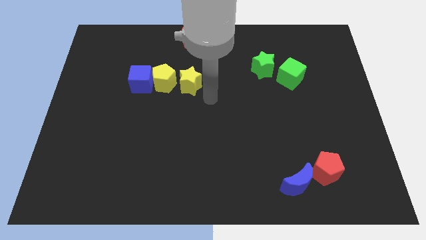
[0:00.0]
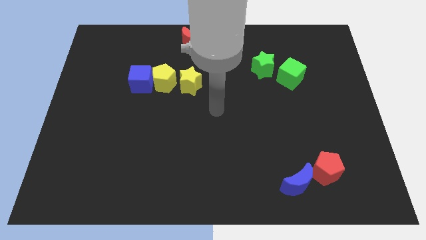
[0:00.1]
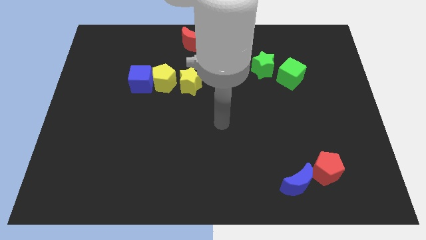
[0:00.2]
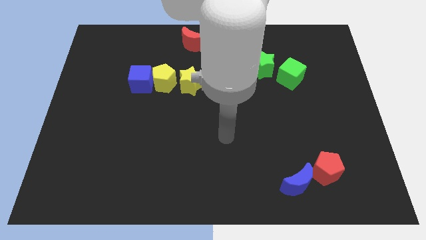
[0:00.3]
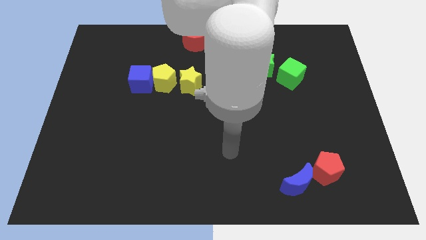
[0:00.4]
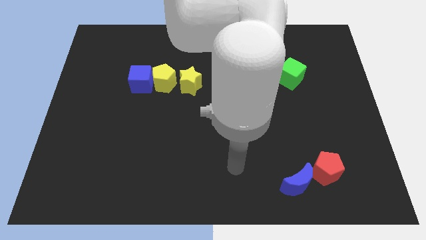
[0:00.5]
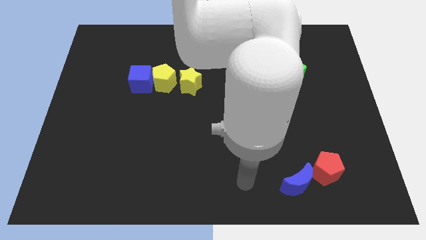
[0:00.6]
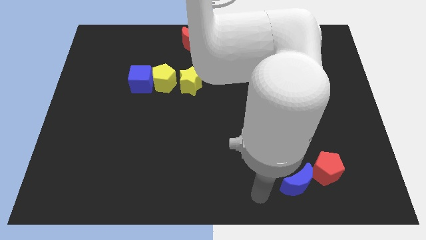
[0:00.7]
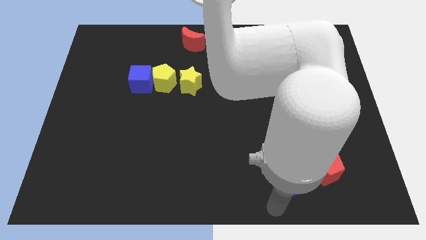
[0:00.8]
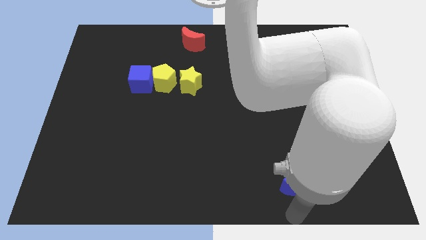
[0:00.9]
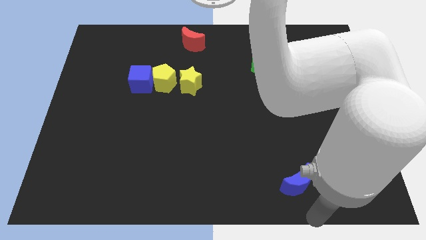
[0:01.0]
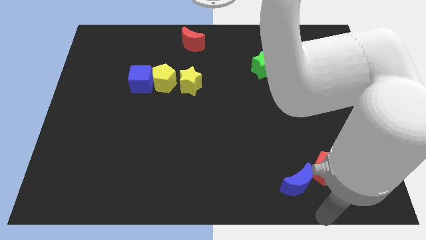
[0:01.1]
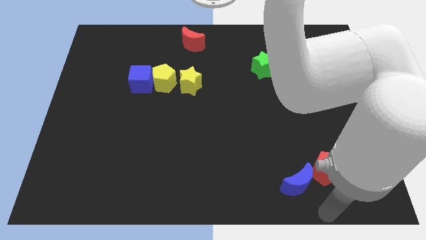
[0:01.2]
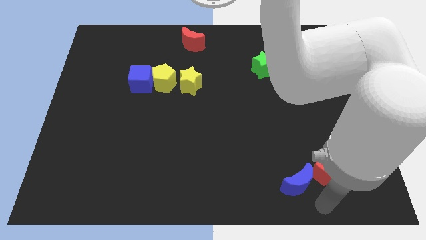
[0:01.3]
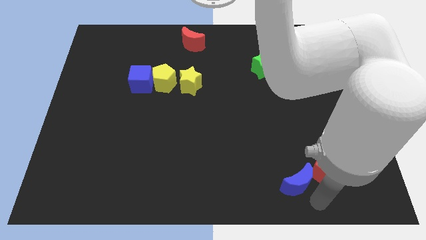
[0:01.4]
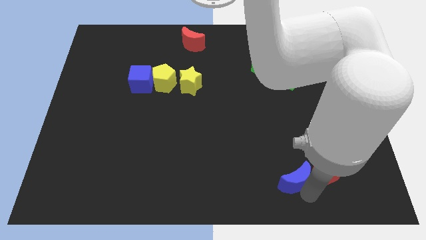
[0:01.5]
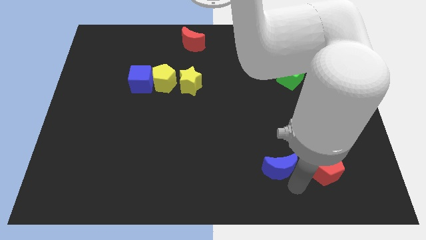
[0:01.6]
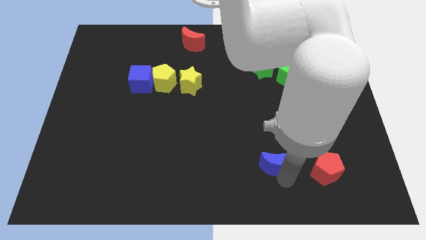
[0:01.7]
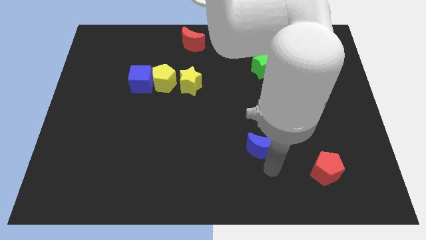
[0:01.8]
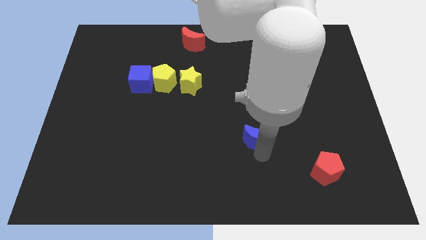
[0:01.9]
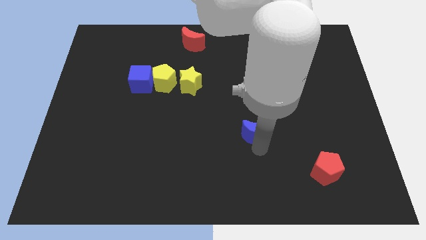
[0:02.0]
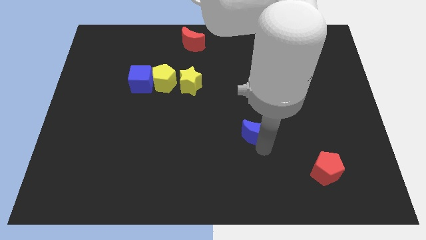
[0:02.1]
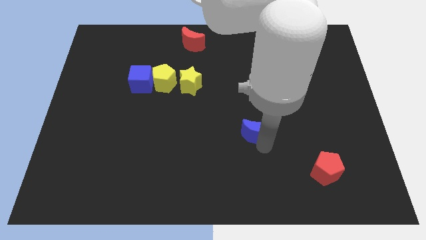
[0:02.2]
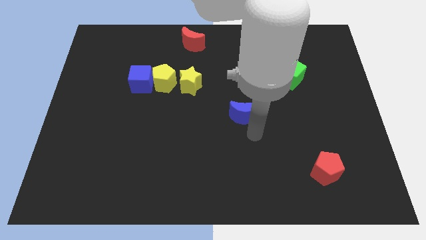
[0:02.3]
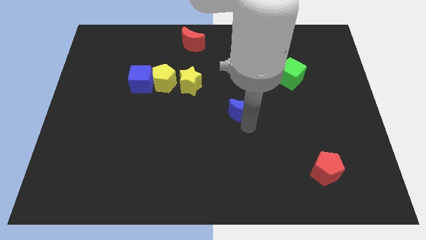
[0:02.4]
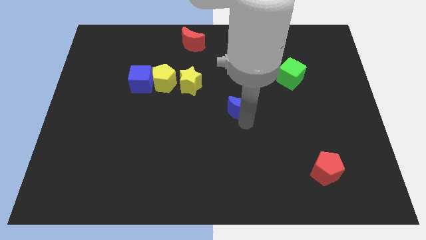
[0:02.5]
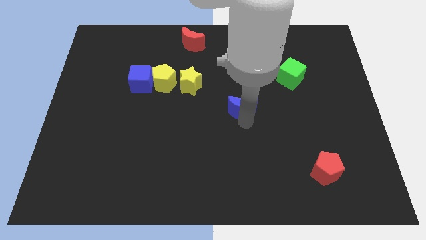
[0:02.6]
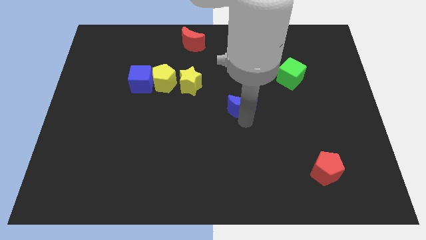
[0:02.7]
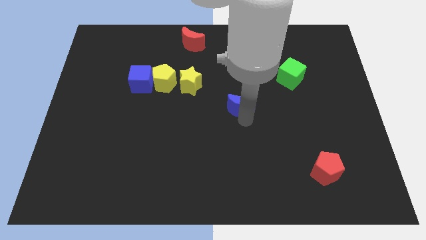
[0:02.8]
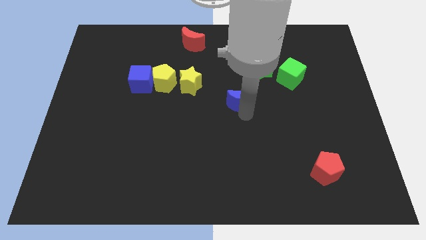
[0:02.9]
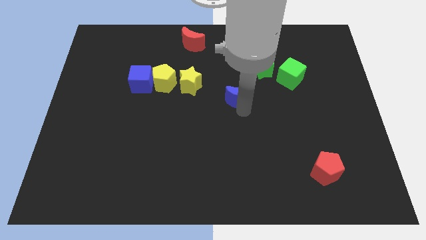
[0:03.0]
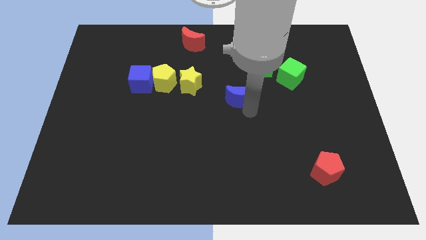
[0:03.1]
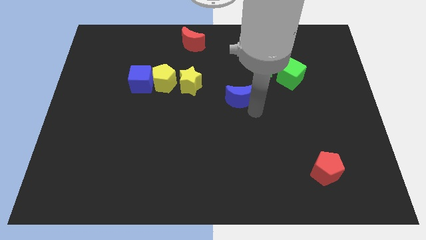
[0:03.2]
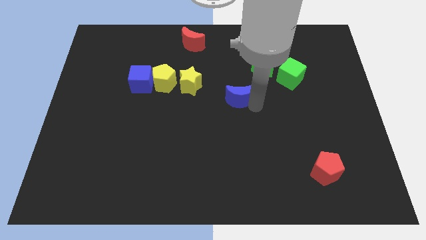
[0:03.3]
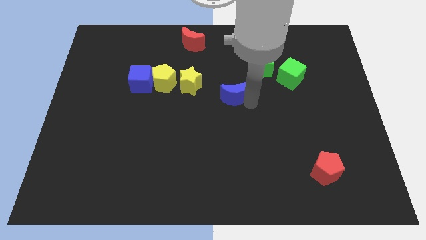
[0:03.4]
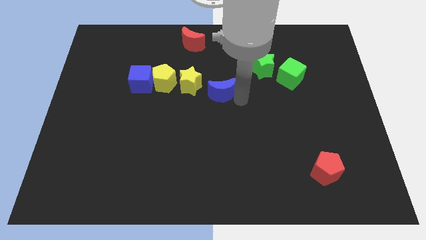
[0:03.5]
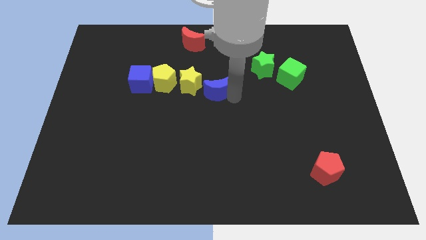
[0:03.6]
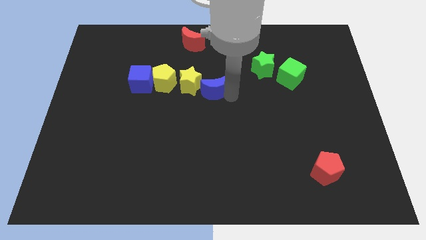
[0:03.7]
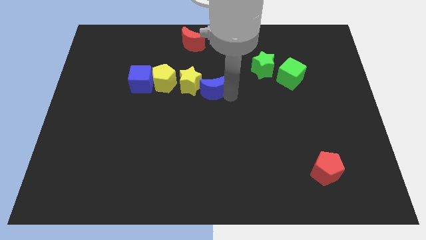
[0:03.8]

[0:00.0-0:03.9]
move blue crescent to the right of yellow star

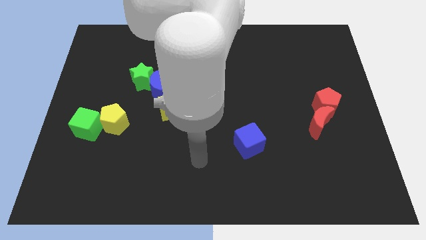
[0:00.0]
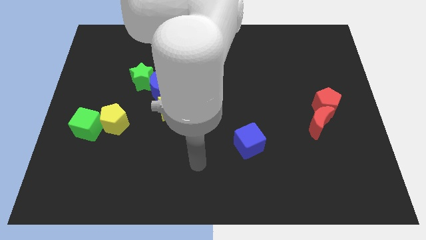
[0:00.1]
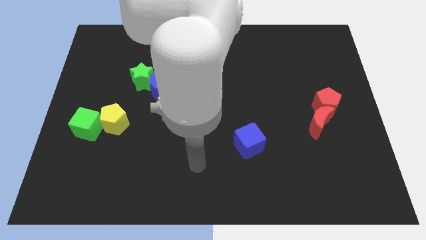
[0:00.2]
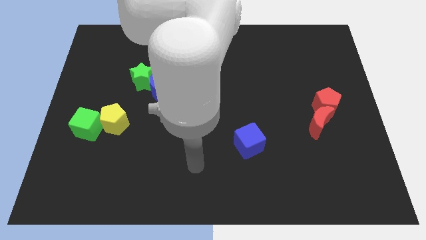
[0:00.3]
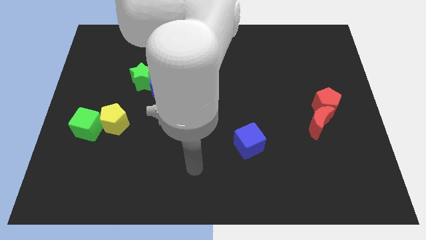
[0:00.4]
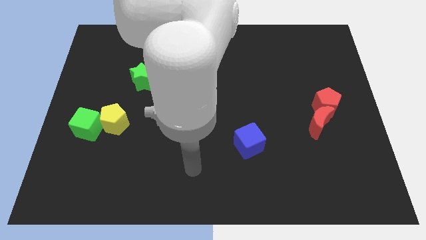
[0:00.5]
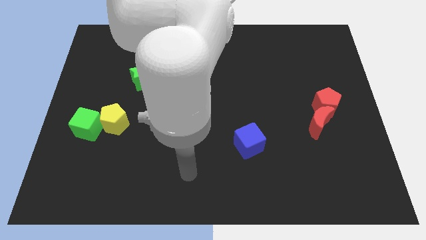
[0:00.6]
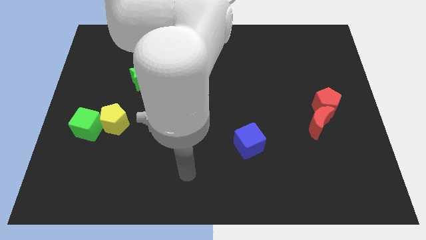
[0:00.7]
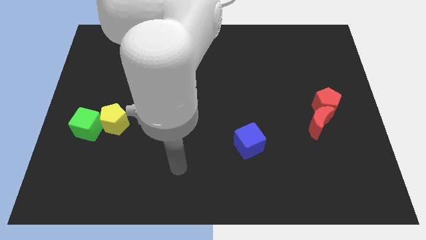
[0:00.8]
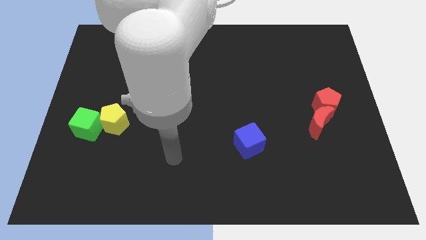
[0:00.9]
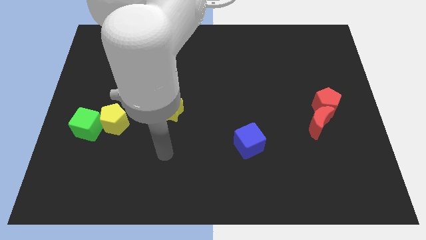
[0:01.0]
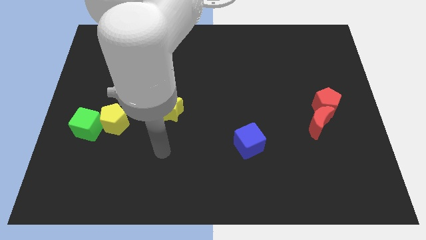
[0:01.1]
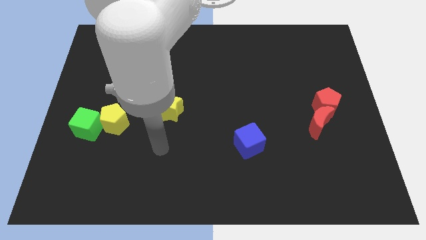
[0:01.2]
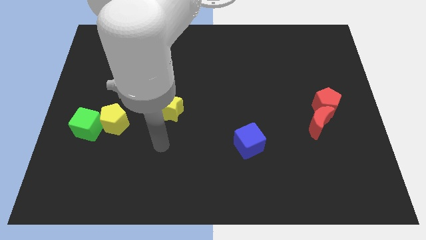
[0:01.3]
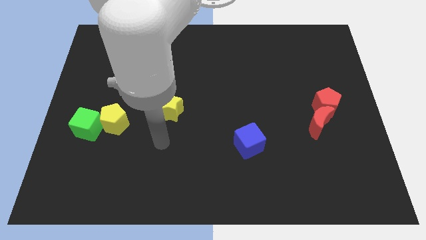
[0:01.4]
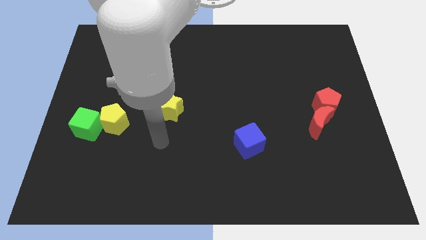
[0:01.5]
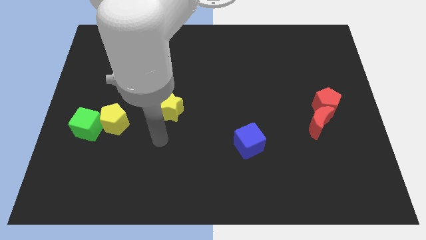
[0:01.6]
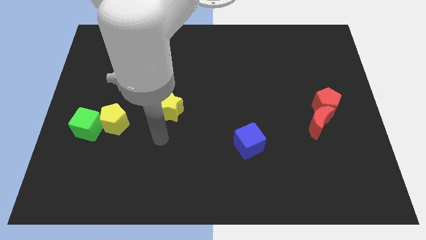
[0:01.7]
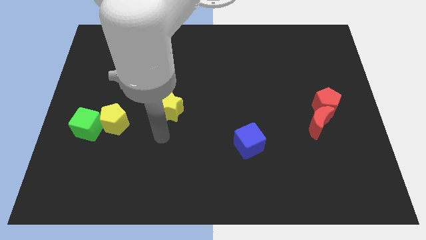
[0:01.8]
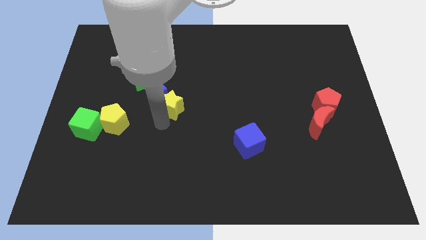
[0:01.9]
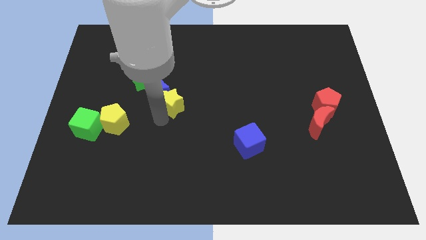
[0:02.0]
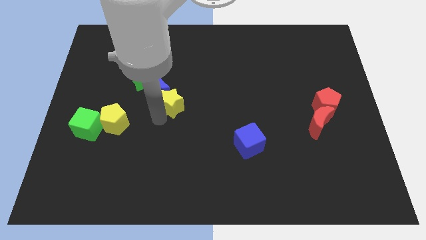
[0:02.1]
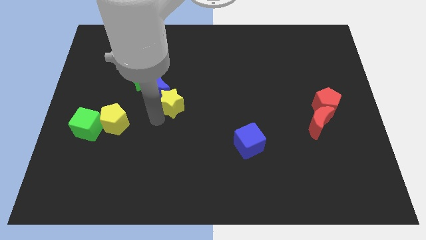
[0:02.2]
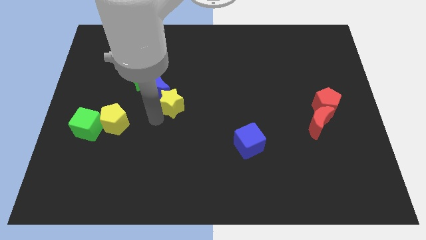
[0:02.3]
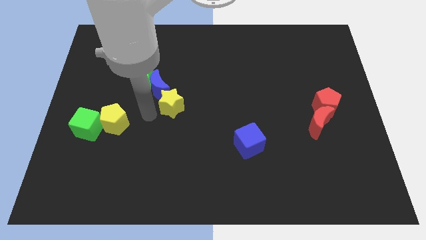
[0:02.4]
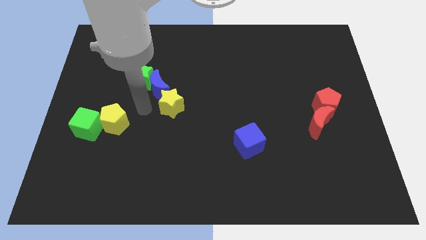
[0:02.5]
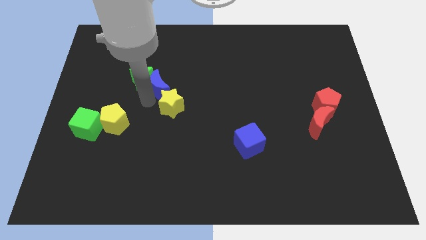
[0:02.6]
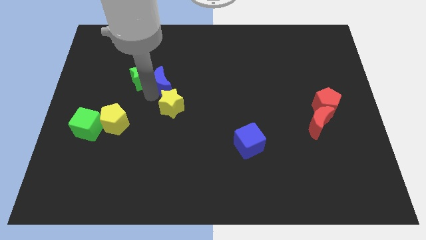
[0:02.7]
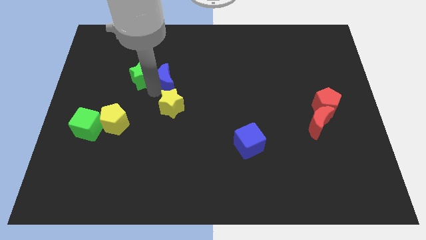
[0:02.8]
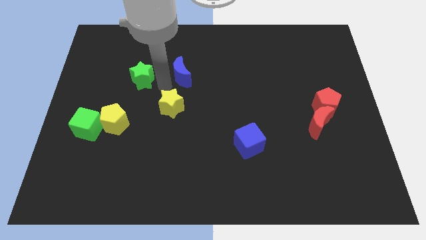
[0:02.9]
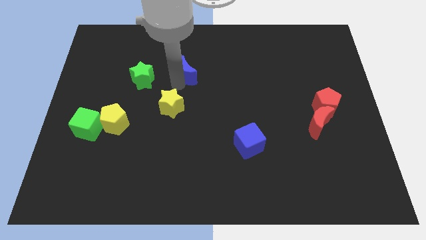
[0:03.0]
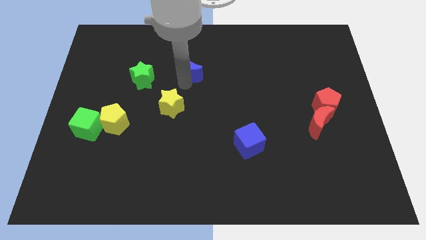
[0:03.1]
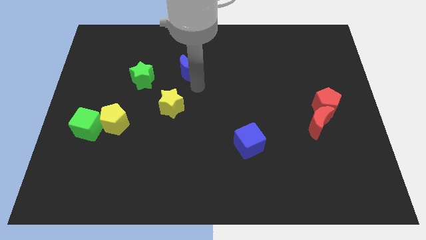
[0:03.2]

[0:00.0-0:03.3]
separate the blue crescent from the green star and the yellow star

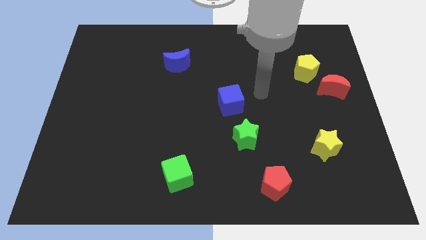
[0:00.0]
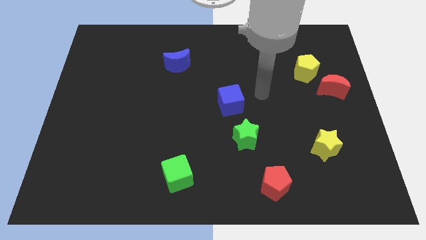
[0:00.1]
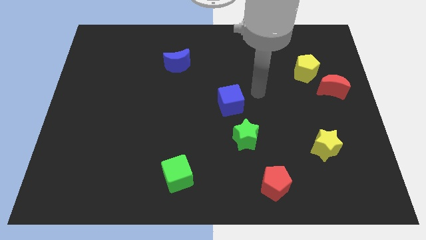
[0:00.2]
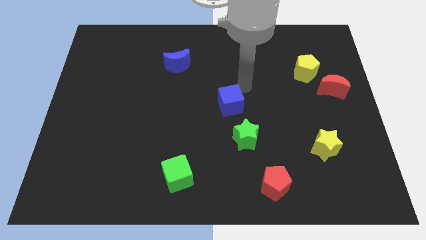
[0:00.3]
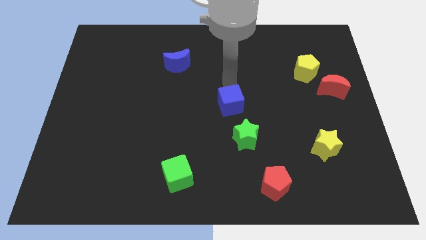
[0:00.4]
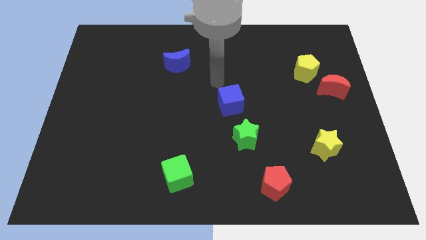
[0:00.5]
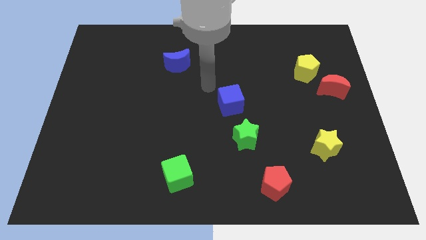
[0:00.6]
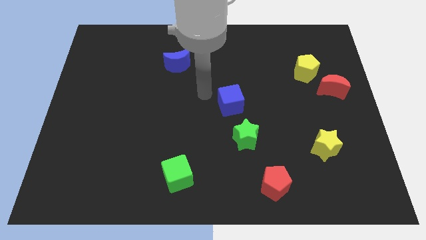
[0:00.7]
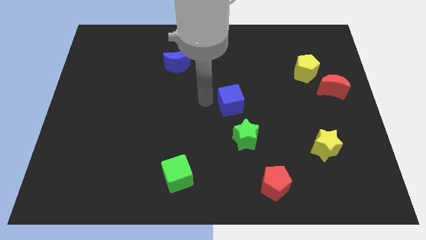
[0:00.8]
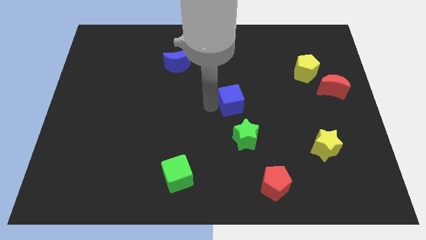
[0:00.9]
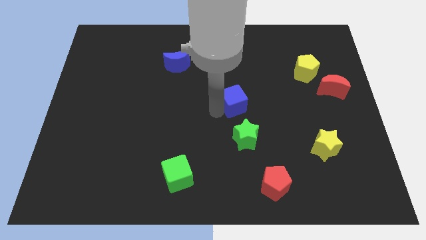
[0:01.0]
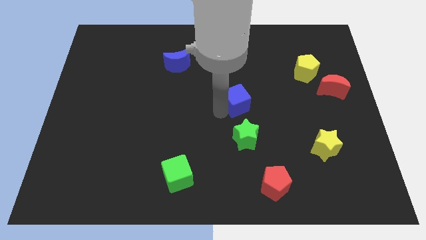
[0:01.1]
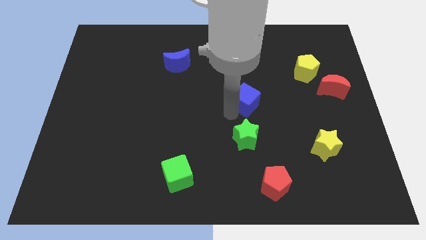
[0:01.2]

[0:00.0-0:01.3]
slightly move the blue cube to the right of the board

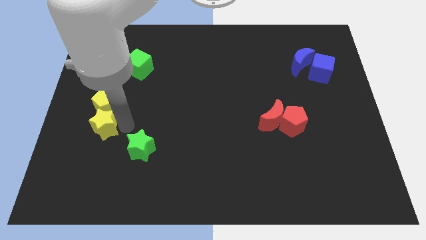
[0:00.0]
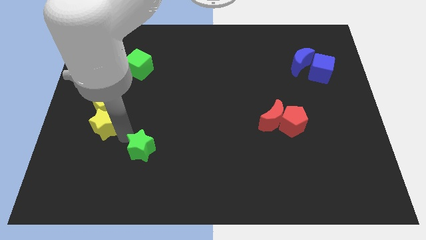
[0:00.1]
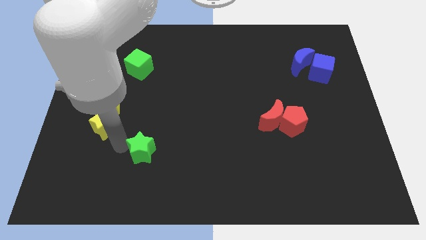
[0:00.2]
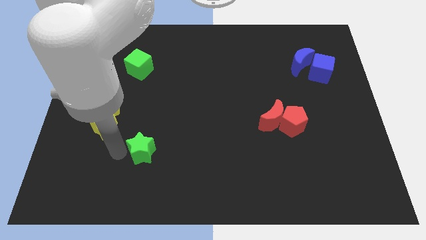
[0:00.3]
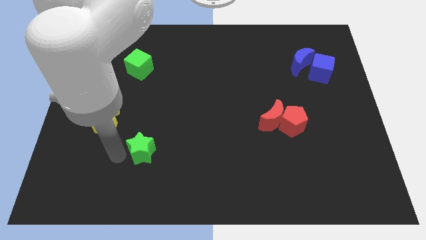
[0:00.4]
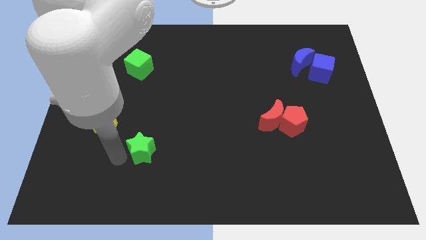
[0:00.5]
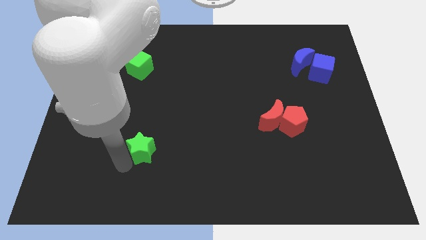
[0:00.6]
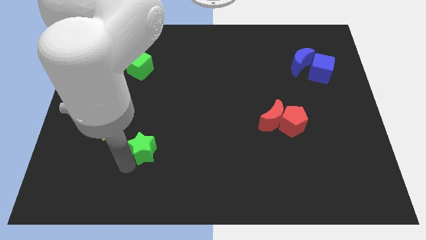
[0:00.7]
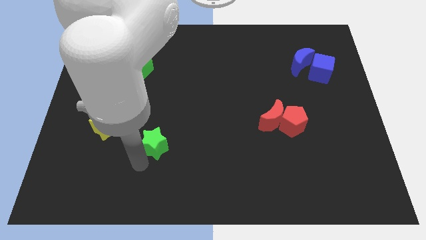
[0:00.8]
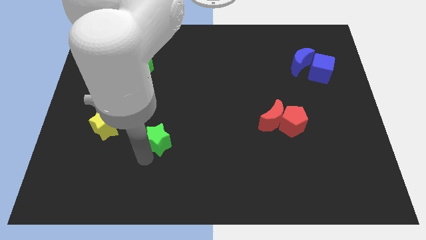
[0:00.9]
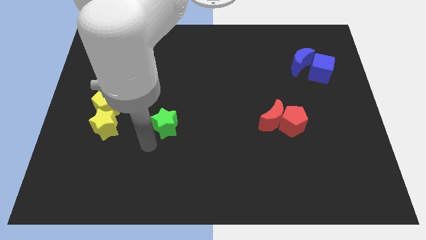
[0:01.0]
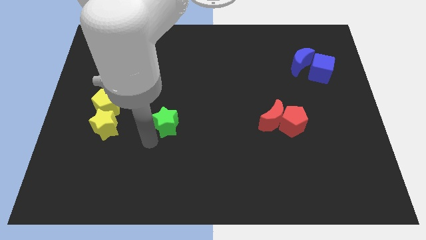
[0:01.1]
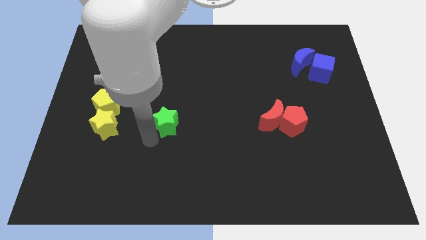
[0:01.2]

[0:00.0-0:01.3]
move the green star parallel to the yellow star
